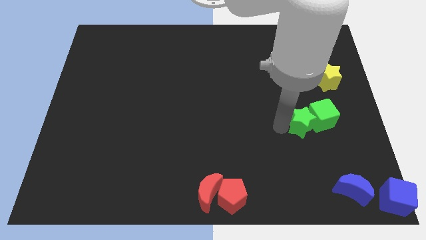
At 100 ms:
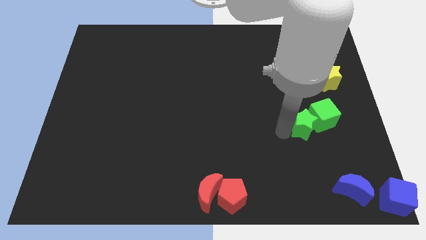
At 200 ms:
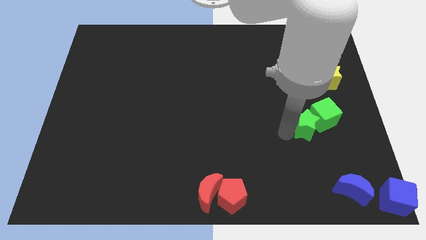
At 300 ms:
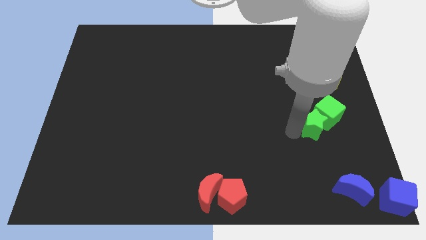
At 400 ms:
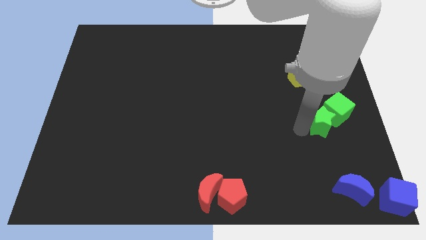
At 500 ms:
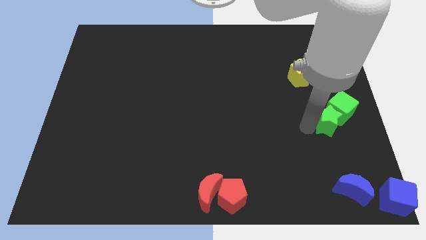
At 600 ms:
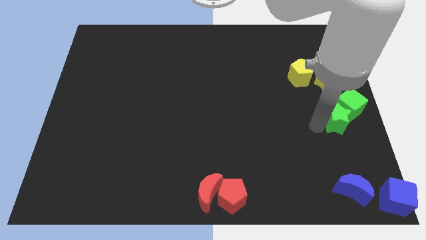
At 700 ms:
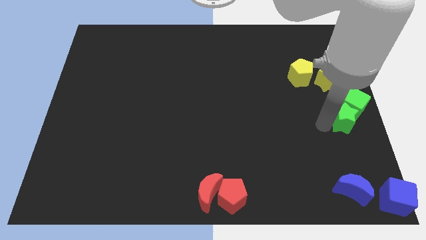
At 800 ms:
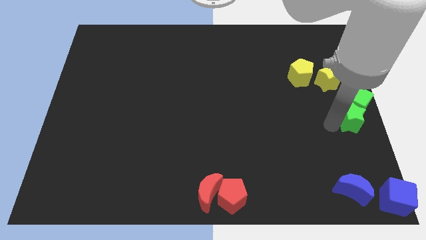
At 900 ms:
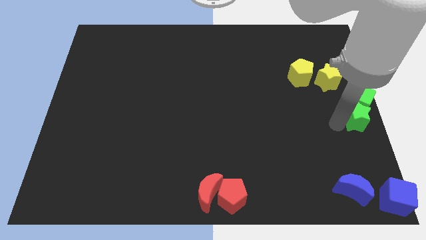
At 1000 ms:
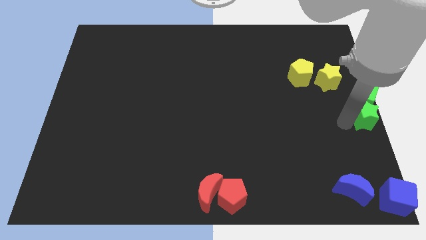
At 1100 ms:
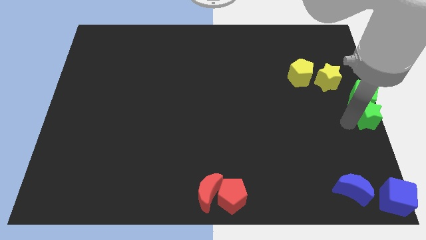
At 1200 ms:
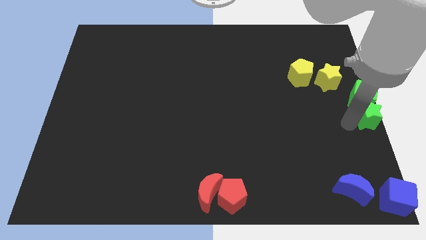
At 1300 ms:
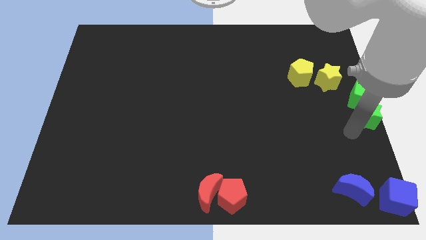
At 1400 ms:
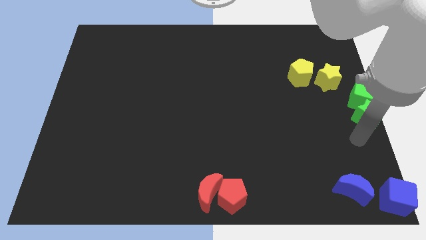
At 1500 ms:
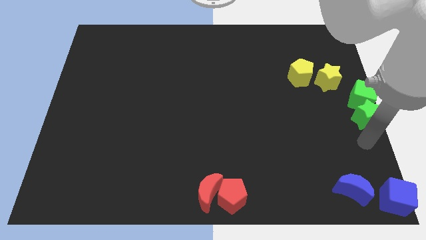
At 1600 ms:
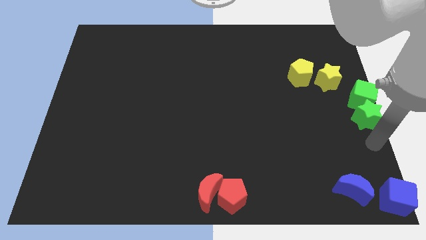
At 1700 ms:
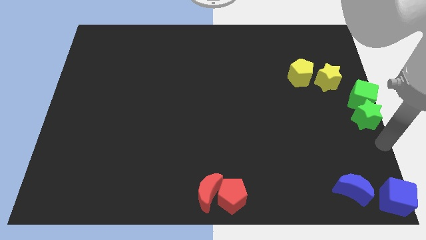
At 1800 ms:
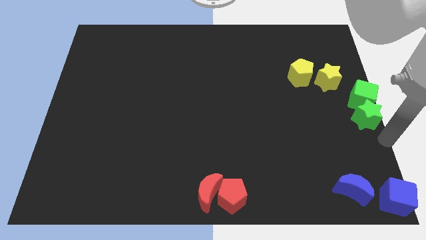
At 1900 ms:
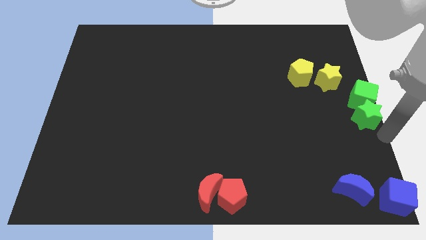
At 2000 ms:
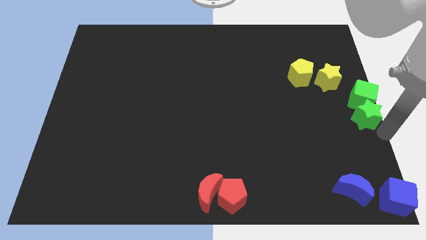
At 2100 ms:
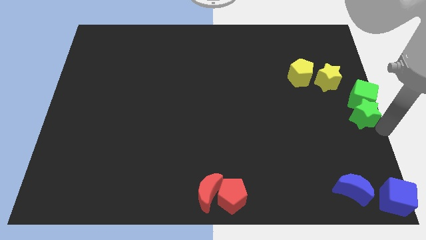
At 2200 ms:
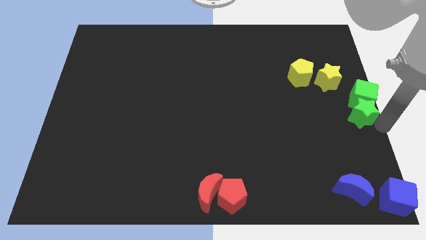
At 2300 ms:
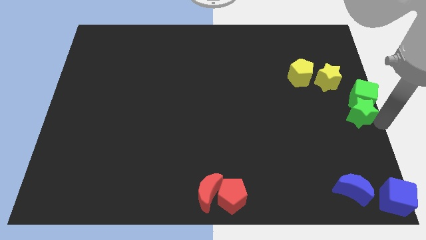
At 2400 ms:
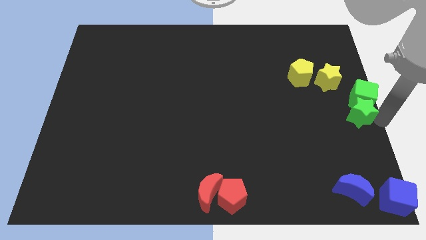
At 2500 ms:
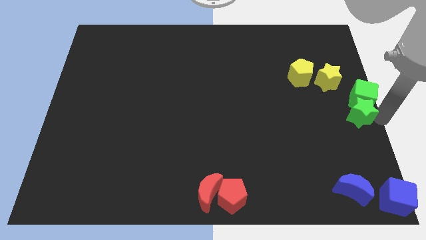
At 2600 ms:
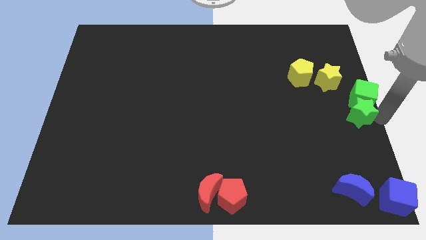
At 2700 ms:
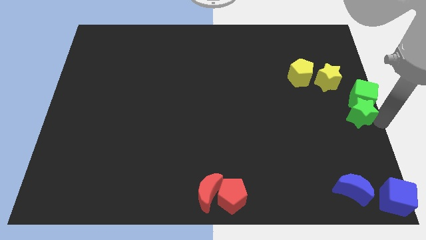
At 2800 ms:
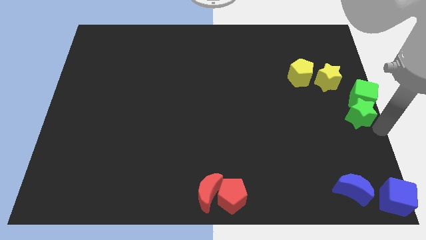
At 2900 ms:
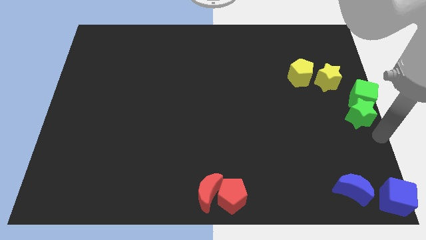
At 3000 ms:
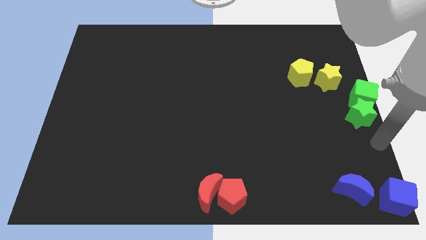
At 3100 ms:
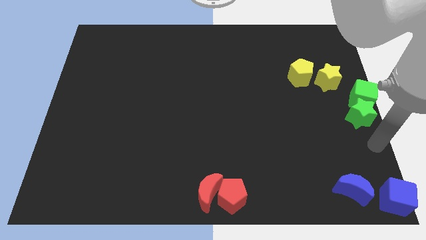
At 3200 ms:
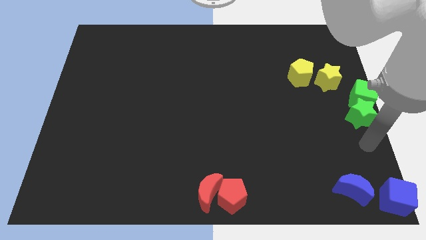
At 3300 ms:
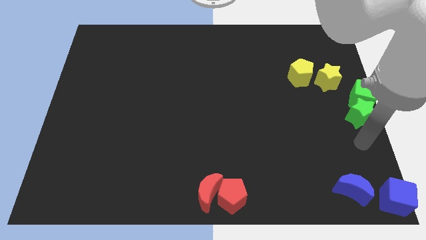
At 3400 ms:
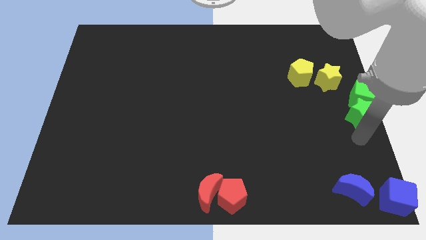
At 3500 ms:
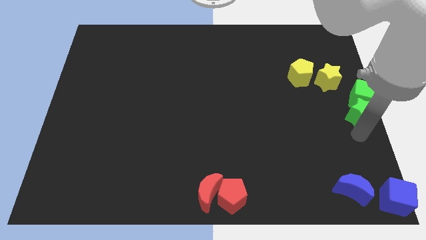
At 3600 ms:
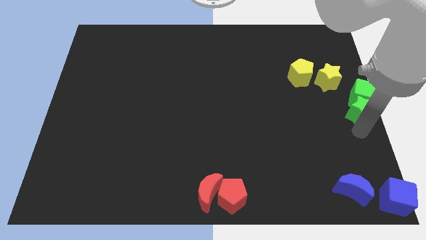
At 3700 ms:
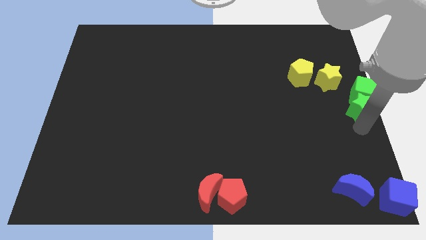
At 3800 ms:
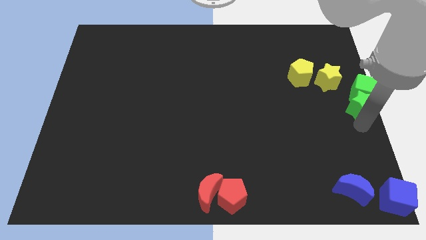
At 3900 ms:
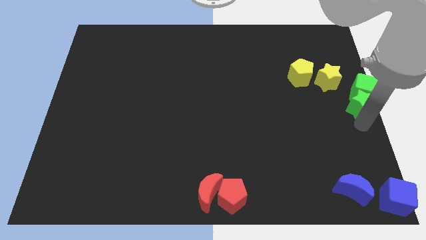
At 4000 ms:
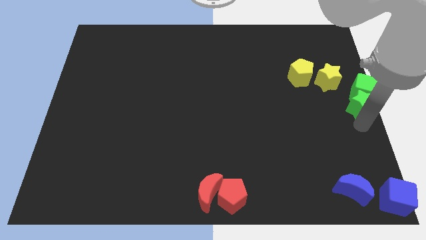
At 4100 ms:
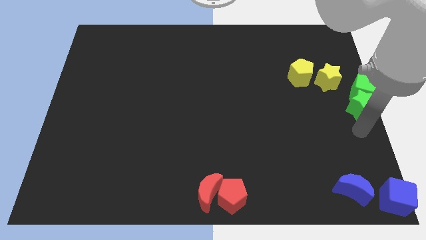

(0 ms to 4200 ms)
move green blocks to the right centre of the board

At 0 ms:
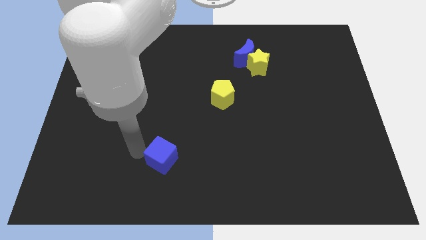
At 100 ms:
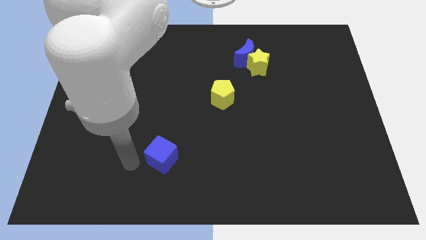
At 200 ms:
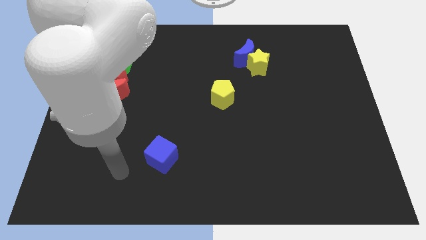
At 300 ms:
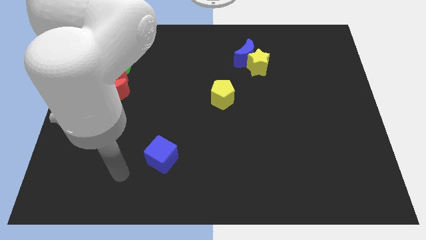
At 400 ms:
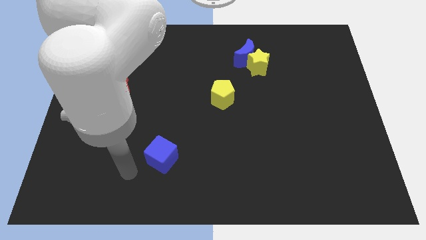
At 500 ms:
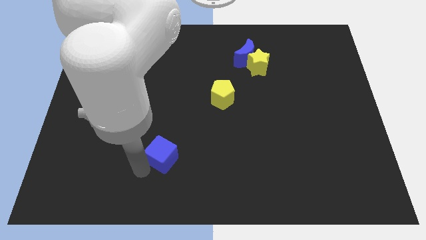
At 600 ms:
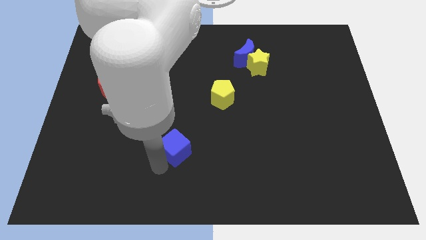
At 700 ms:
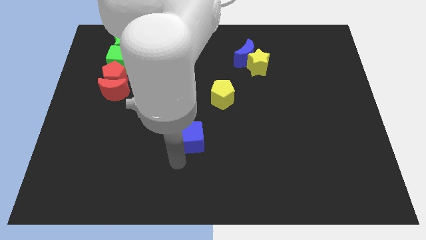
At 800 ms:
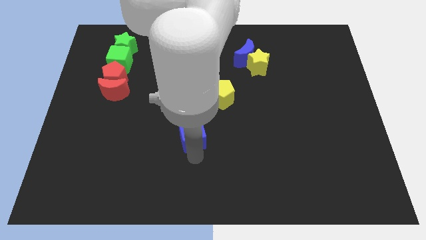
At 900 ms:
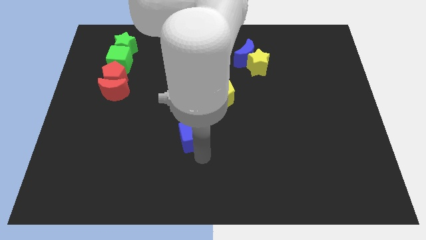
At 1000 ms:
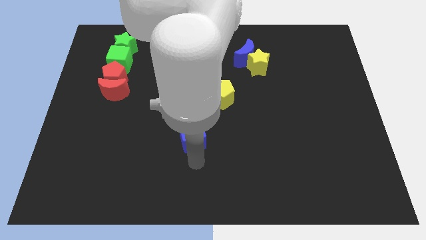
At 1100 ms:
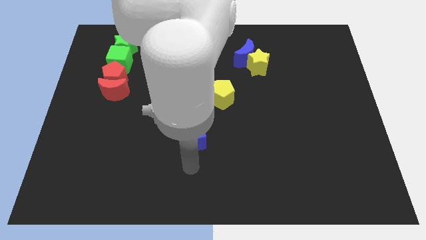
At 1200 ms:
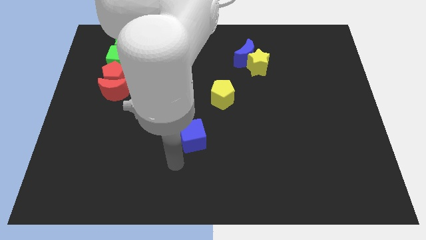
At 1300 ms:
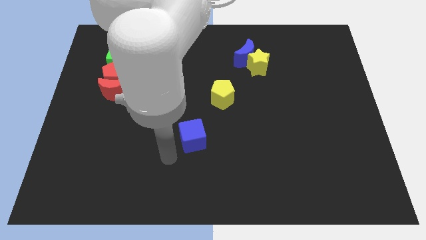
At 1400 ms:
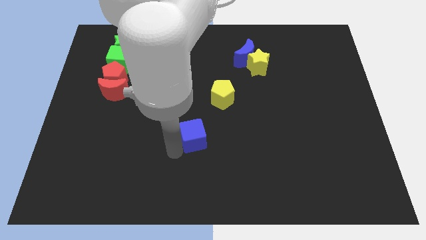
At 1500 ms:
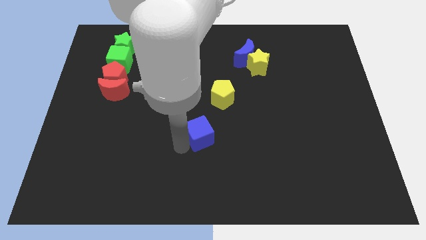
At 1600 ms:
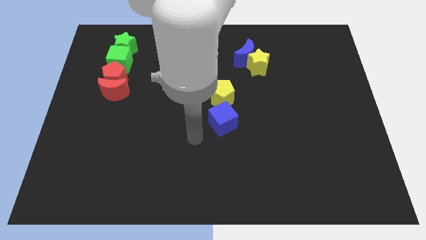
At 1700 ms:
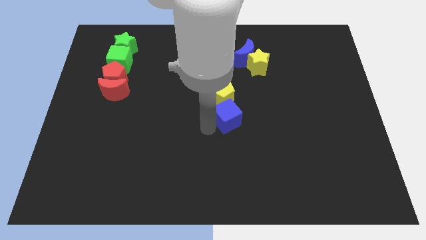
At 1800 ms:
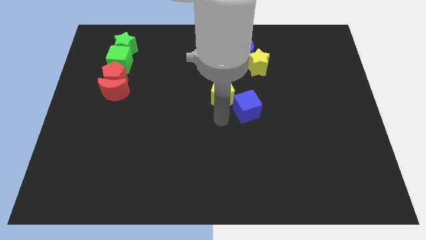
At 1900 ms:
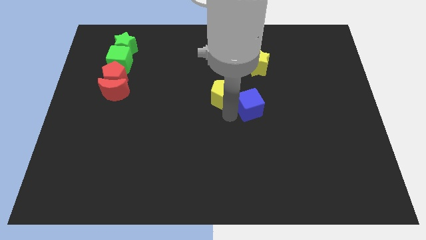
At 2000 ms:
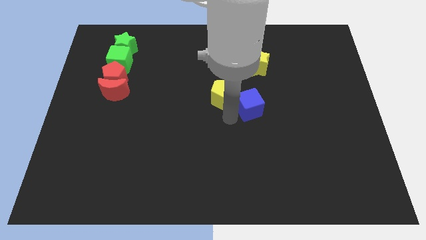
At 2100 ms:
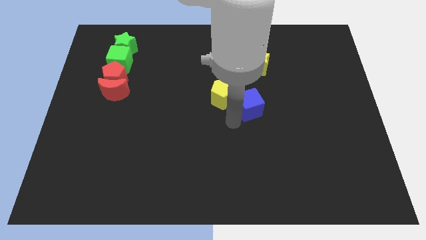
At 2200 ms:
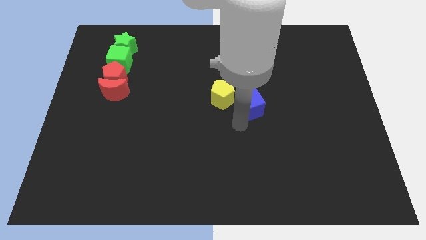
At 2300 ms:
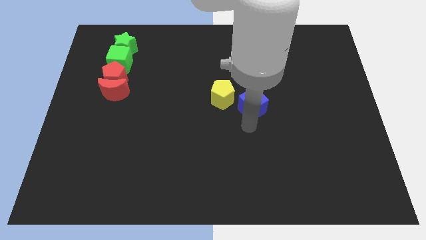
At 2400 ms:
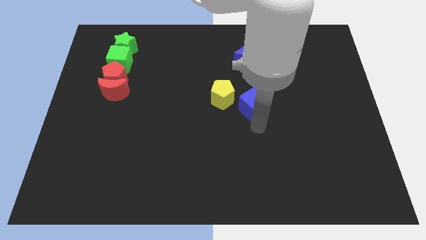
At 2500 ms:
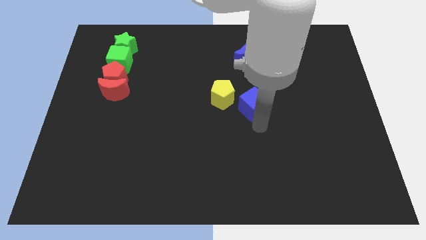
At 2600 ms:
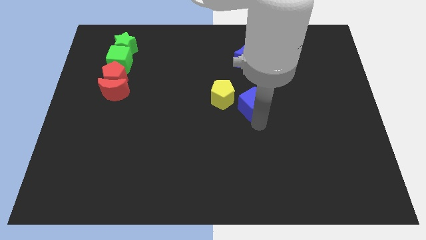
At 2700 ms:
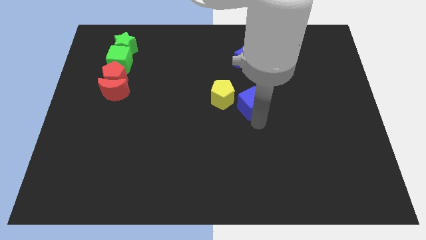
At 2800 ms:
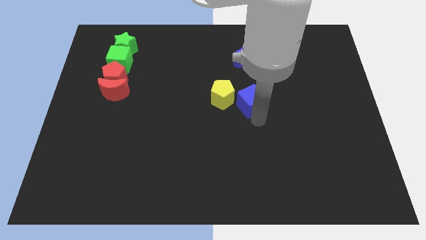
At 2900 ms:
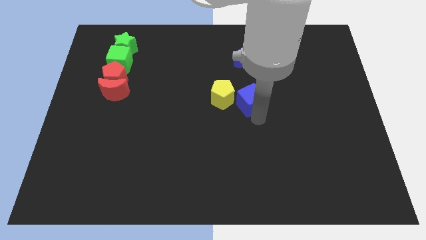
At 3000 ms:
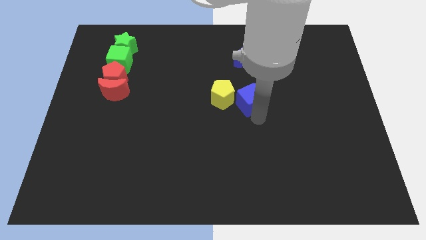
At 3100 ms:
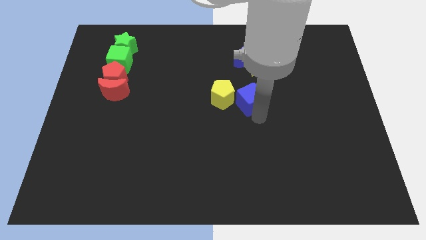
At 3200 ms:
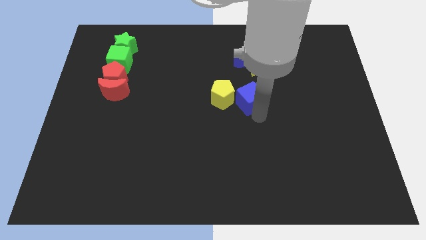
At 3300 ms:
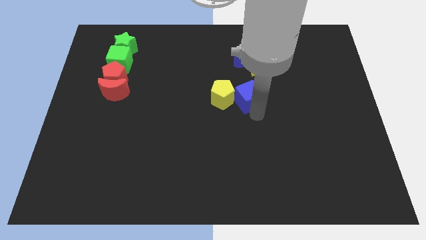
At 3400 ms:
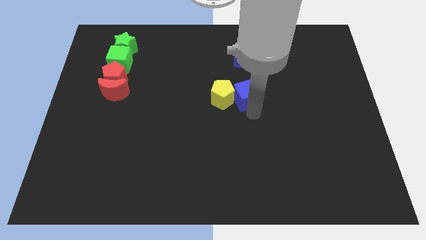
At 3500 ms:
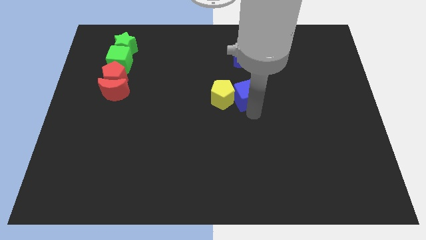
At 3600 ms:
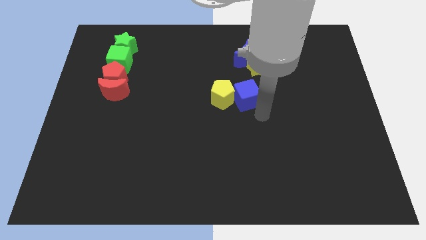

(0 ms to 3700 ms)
place the blue cube to the right of the yellow pentagon

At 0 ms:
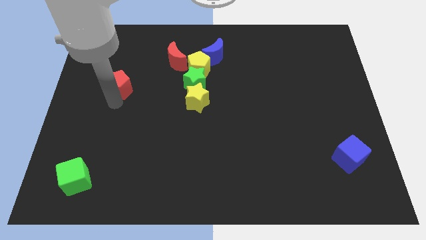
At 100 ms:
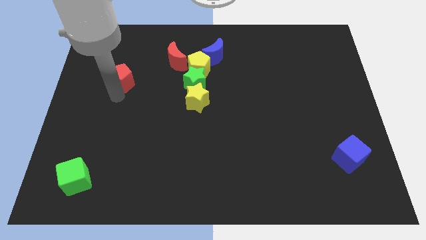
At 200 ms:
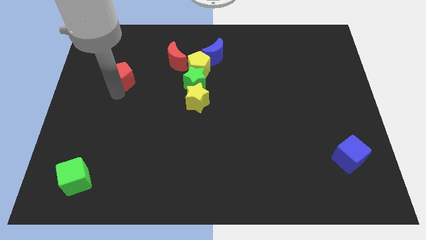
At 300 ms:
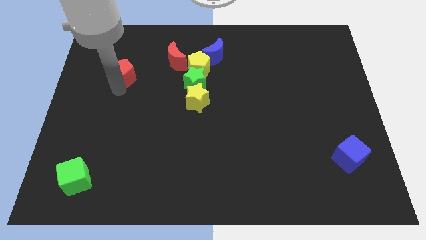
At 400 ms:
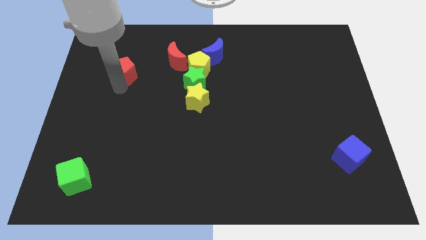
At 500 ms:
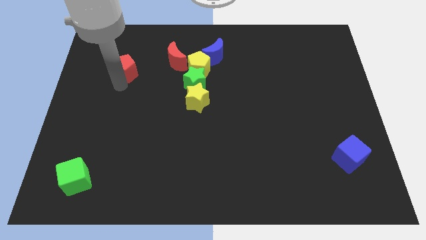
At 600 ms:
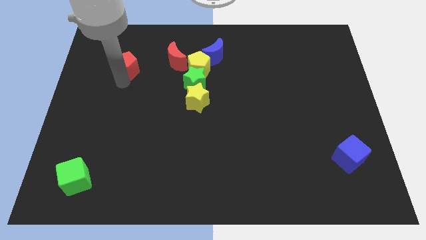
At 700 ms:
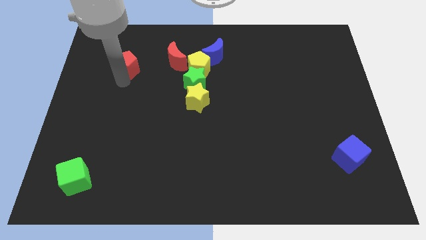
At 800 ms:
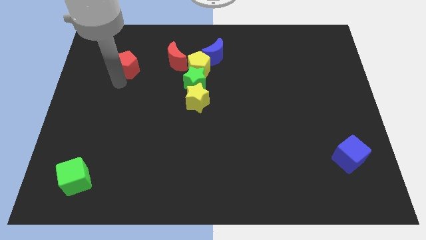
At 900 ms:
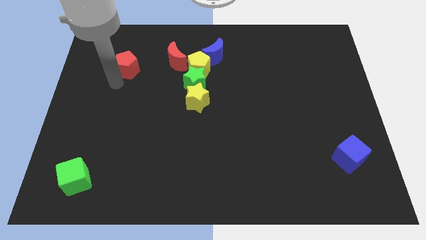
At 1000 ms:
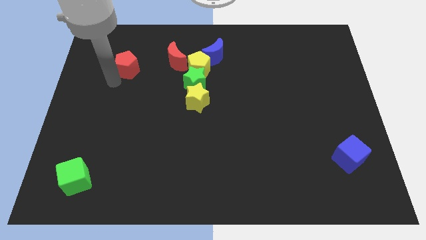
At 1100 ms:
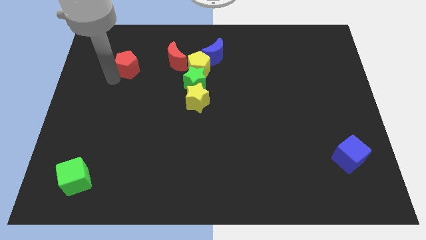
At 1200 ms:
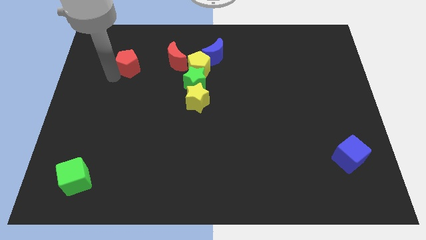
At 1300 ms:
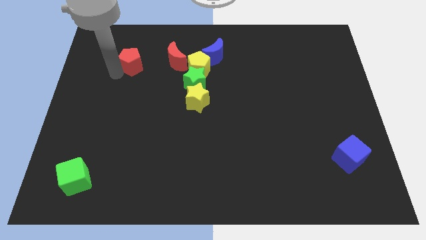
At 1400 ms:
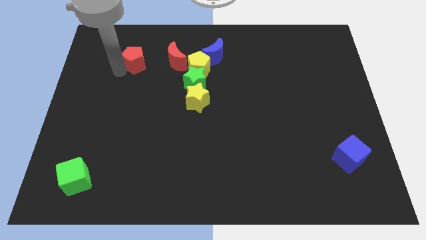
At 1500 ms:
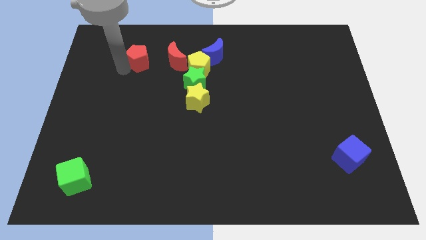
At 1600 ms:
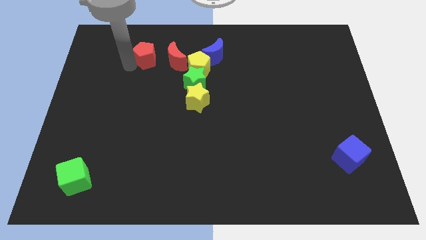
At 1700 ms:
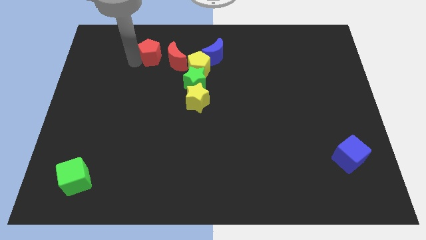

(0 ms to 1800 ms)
move the red pentagon to the red crescent
